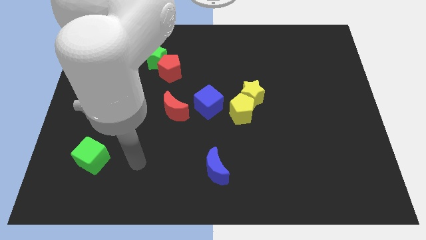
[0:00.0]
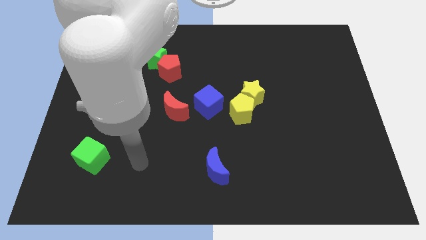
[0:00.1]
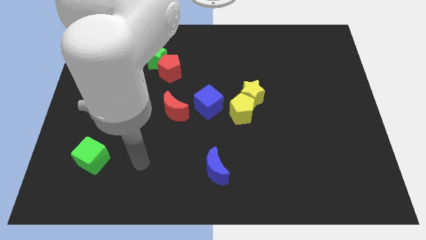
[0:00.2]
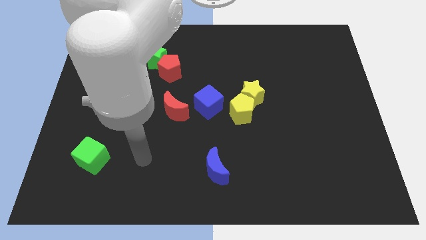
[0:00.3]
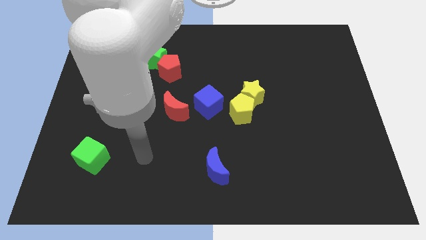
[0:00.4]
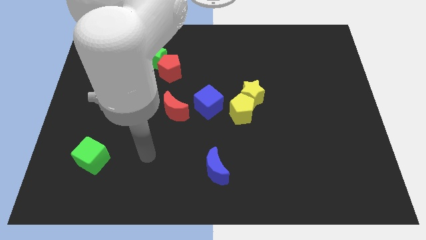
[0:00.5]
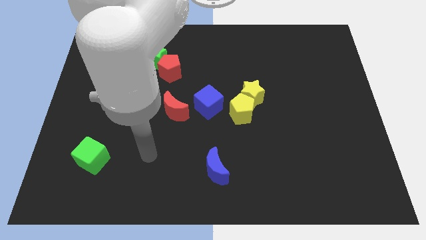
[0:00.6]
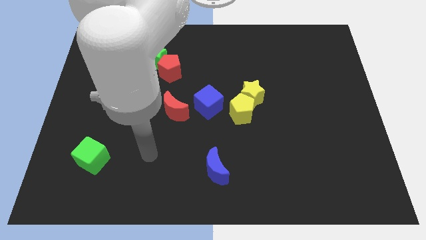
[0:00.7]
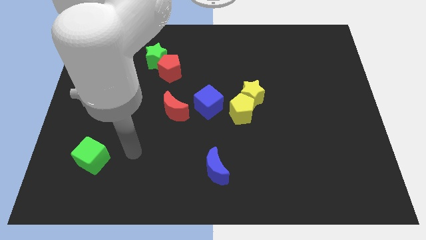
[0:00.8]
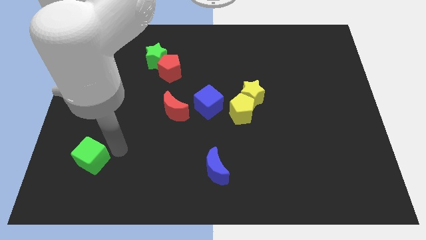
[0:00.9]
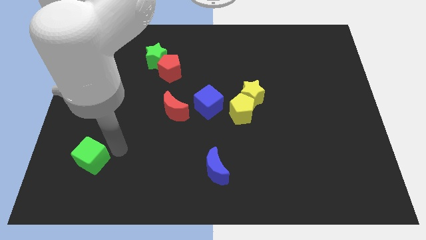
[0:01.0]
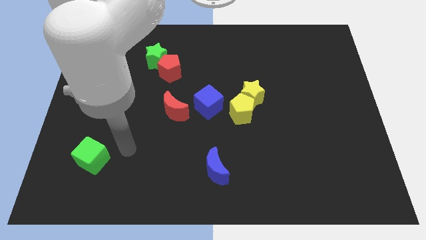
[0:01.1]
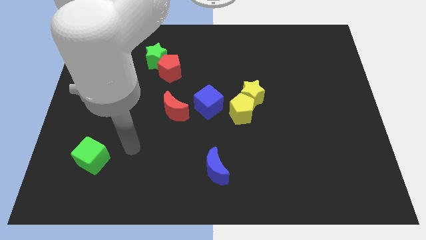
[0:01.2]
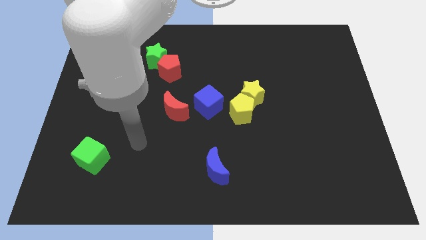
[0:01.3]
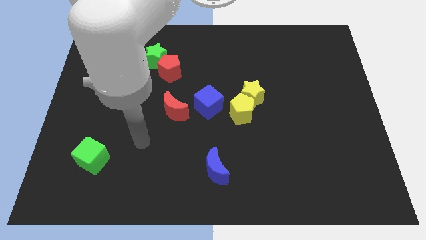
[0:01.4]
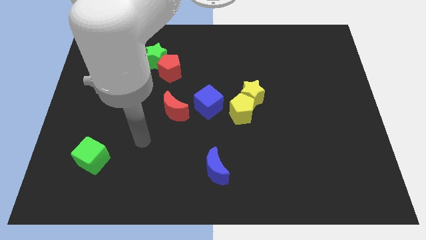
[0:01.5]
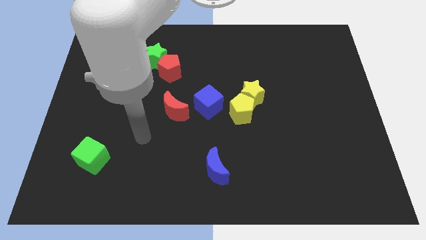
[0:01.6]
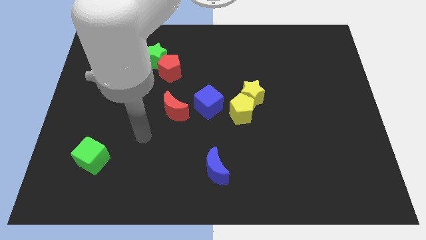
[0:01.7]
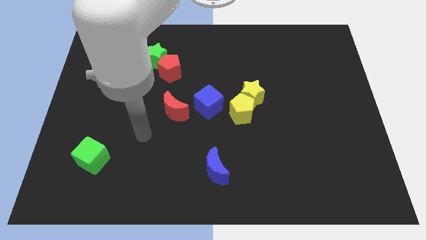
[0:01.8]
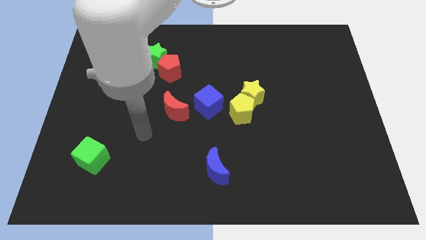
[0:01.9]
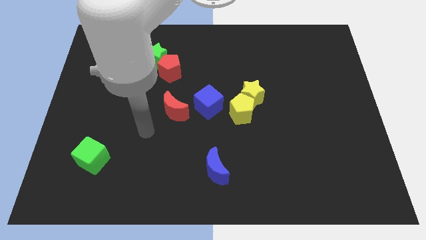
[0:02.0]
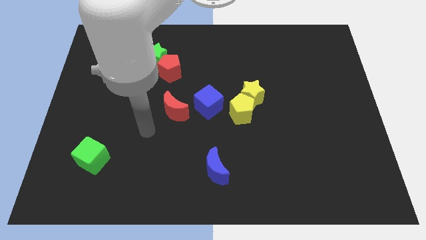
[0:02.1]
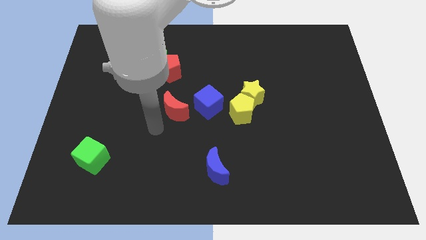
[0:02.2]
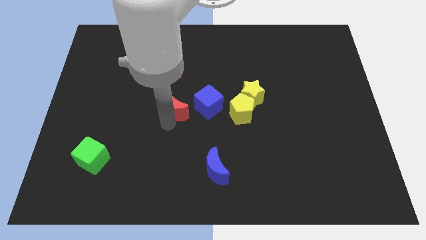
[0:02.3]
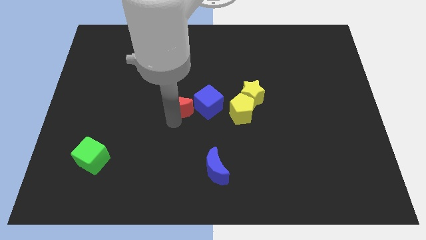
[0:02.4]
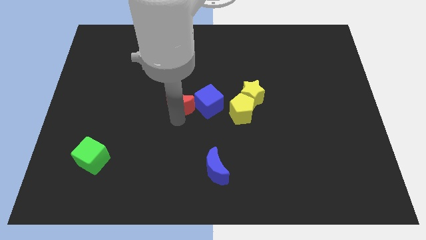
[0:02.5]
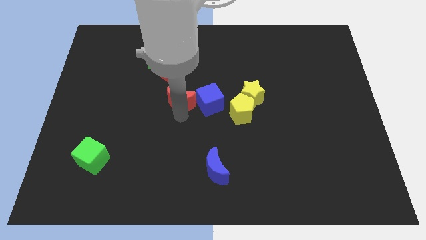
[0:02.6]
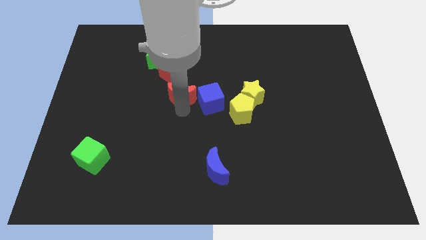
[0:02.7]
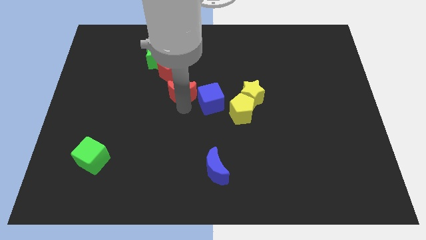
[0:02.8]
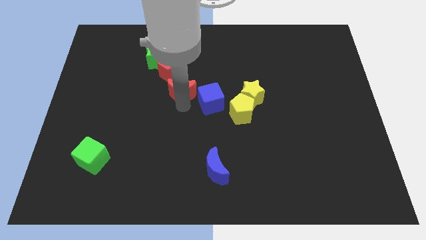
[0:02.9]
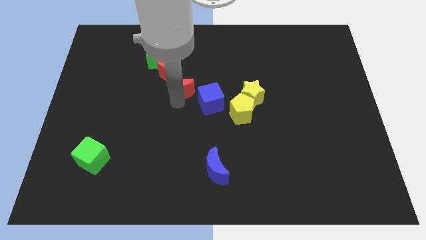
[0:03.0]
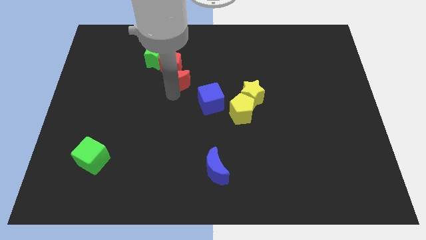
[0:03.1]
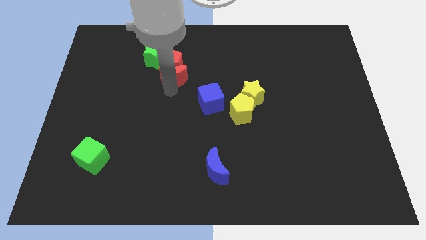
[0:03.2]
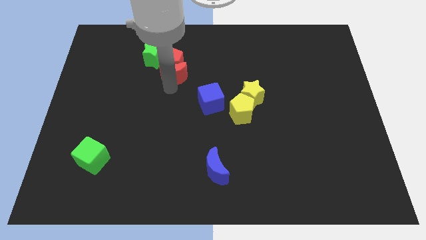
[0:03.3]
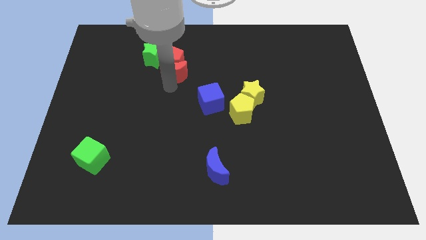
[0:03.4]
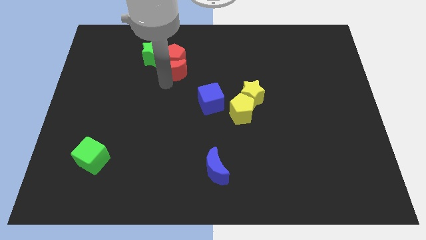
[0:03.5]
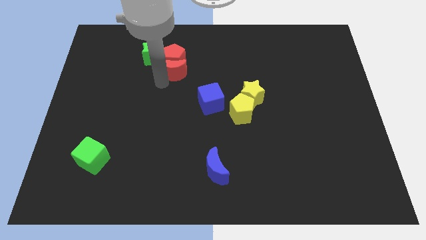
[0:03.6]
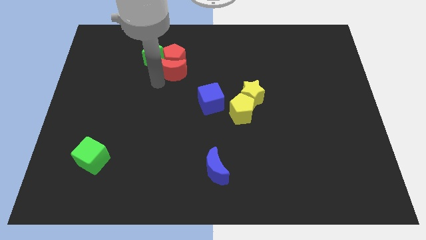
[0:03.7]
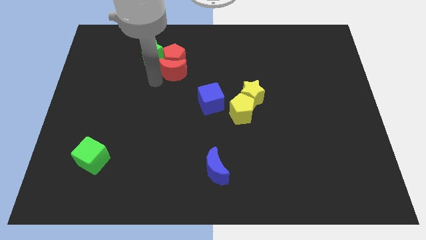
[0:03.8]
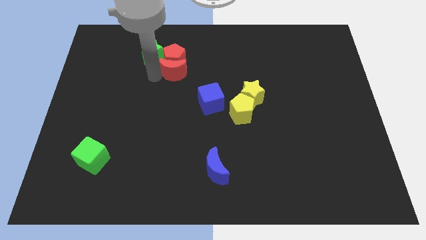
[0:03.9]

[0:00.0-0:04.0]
push the red moon into the red pentagon

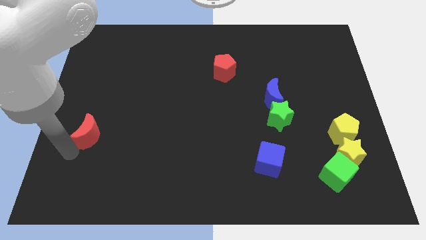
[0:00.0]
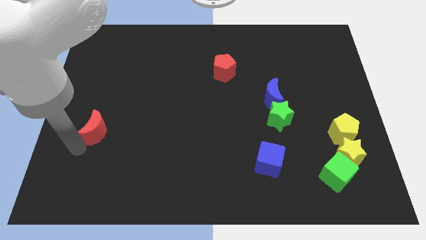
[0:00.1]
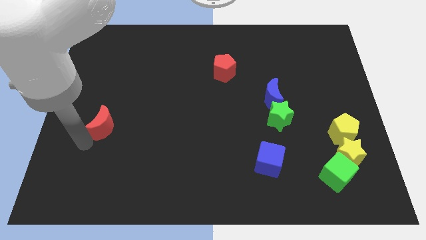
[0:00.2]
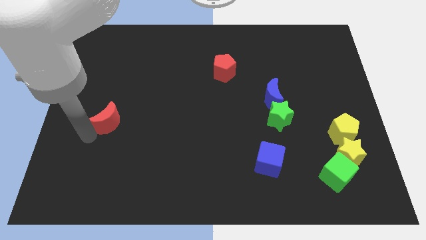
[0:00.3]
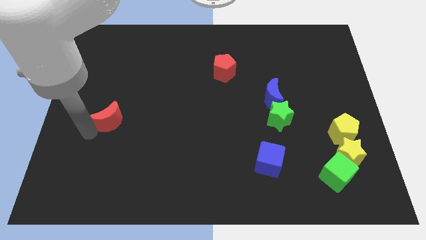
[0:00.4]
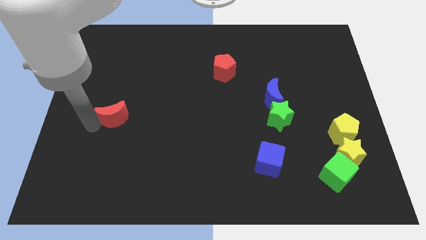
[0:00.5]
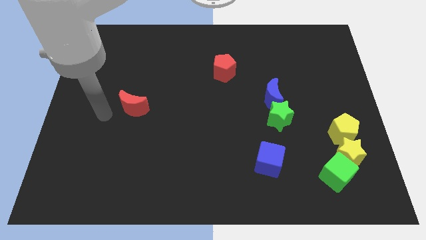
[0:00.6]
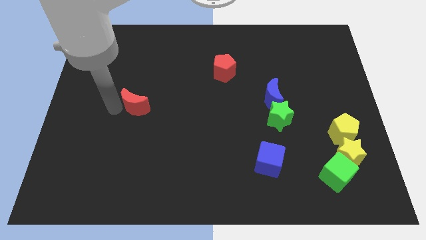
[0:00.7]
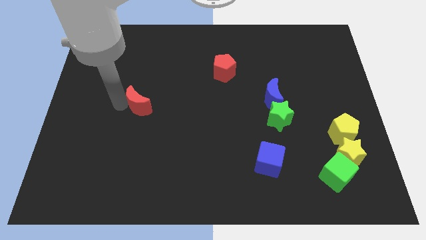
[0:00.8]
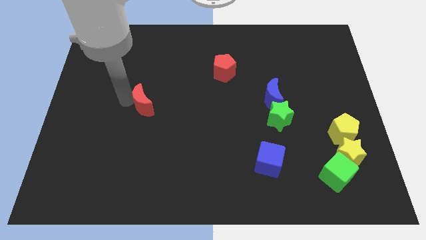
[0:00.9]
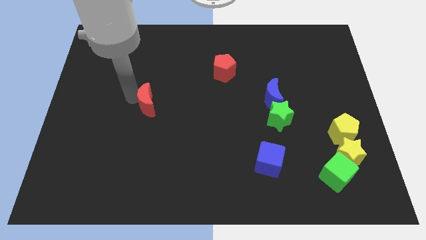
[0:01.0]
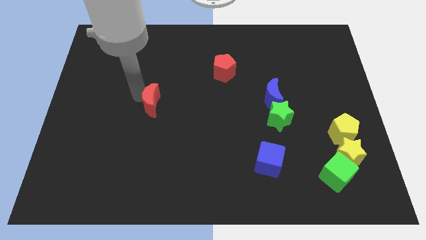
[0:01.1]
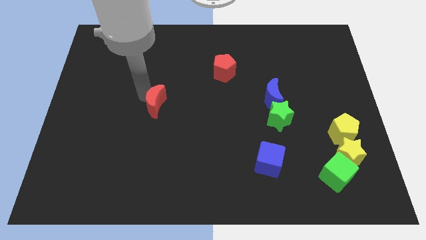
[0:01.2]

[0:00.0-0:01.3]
push the red crescent towards the blue crescent

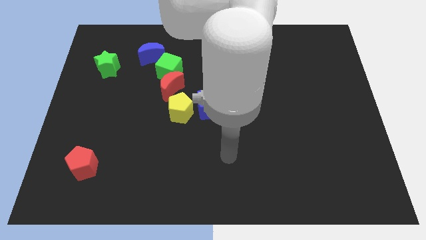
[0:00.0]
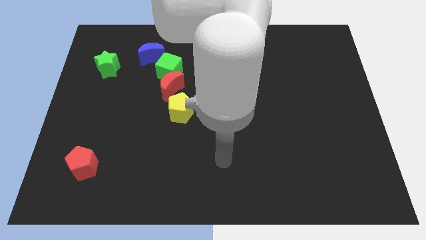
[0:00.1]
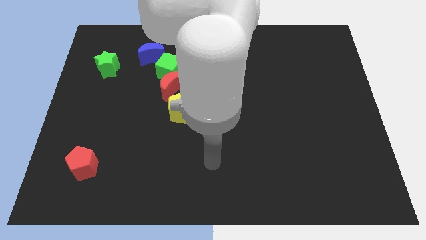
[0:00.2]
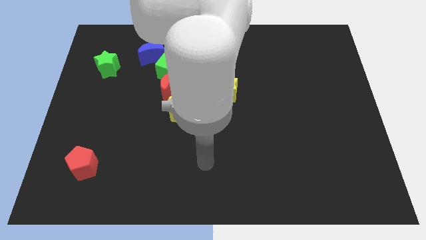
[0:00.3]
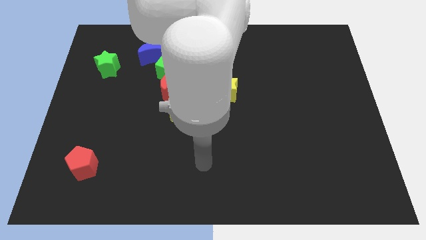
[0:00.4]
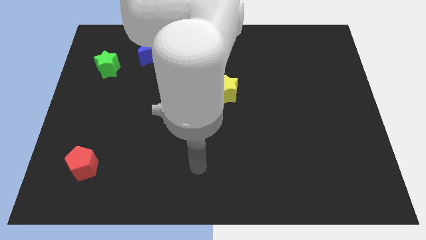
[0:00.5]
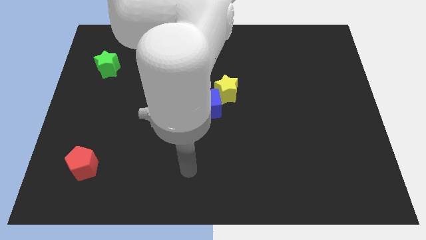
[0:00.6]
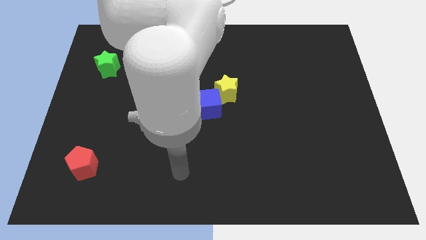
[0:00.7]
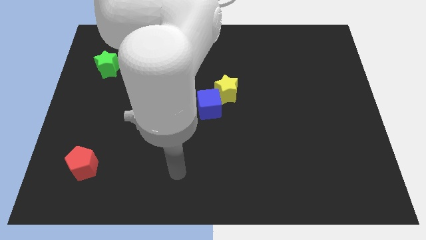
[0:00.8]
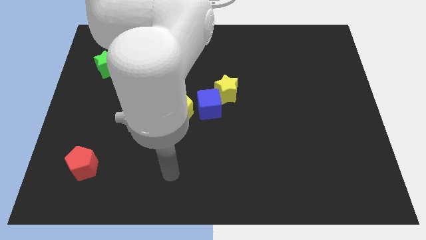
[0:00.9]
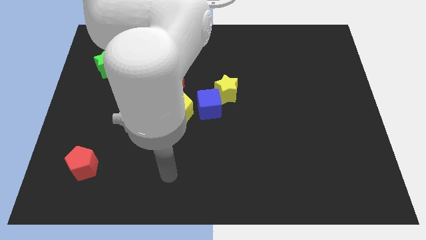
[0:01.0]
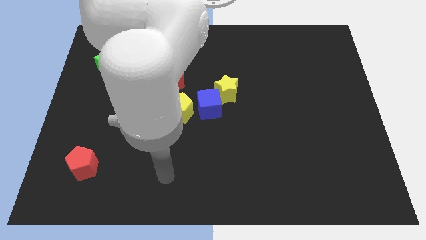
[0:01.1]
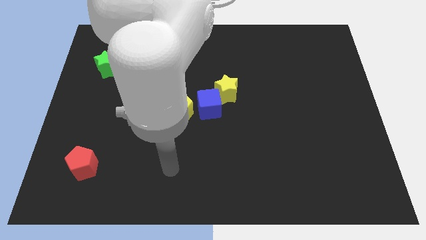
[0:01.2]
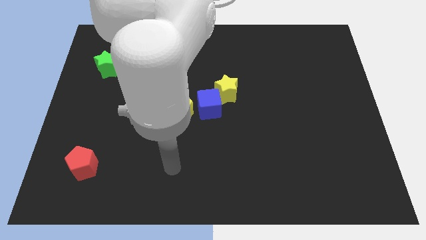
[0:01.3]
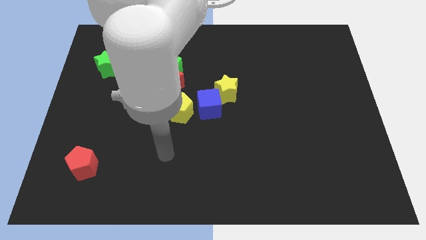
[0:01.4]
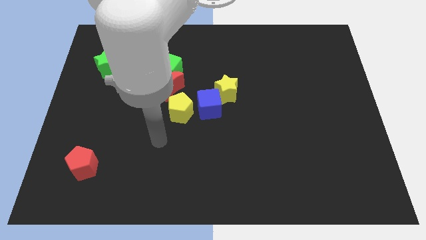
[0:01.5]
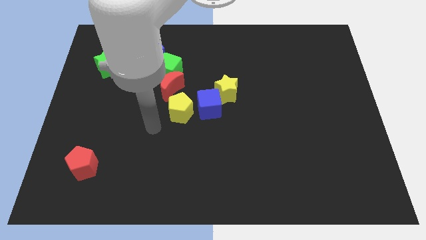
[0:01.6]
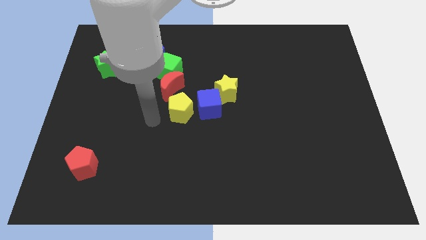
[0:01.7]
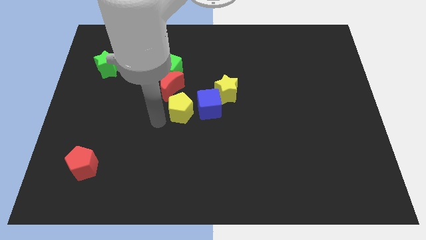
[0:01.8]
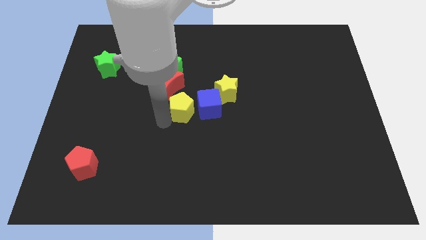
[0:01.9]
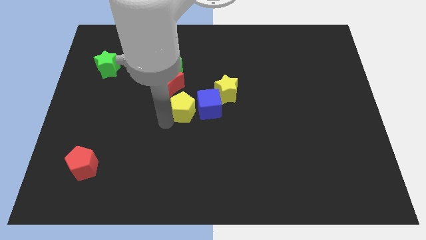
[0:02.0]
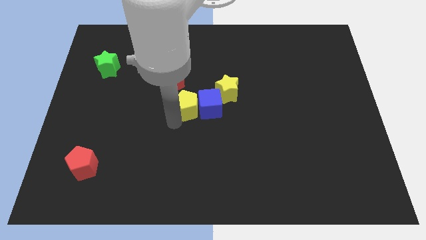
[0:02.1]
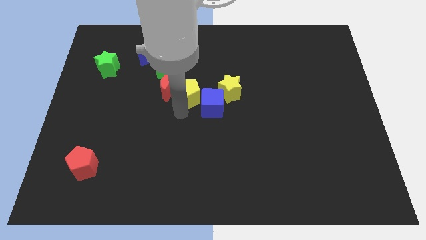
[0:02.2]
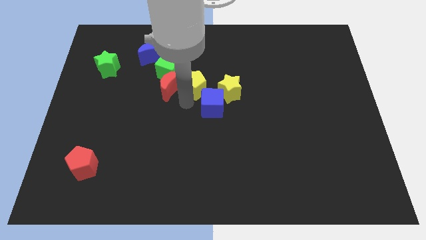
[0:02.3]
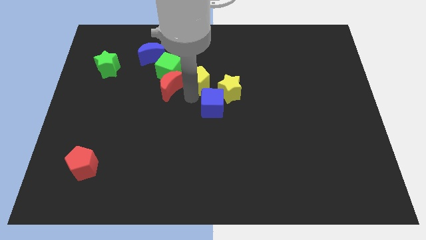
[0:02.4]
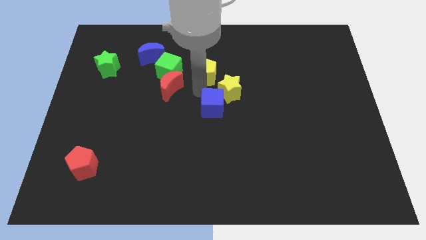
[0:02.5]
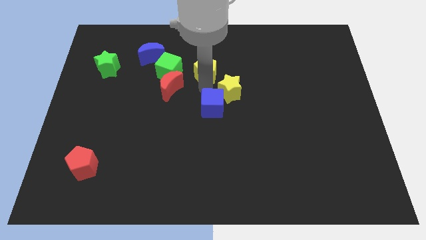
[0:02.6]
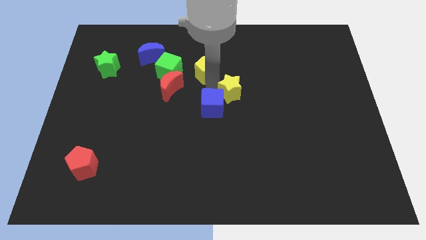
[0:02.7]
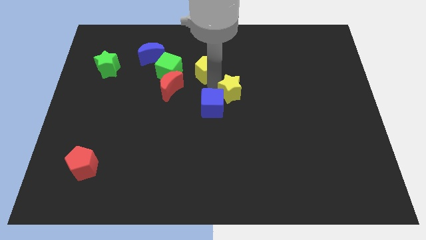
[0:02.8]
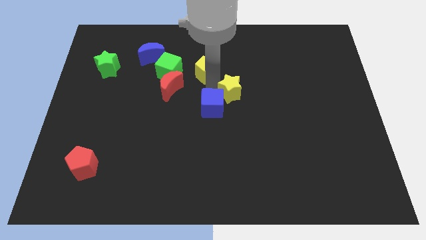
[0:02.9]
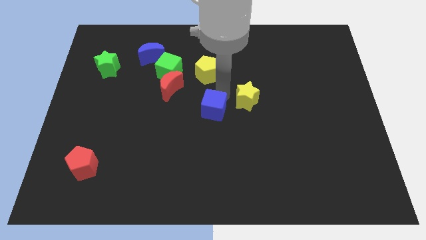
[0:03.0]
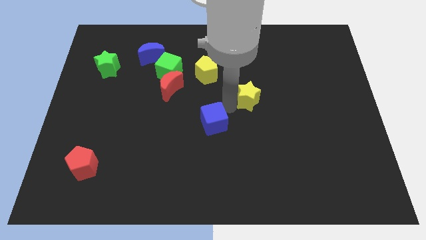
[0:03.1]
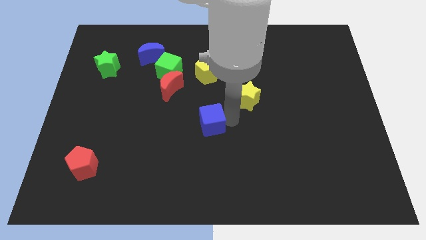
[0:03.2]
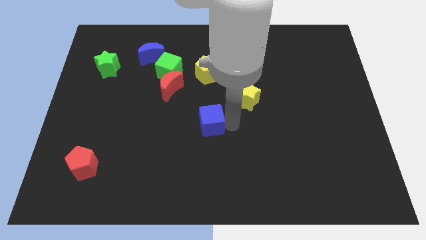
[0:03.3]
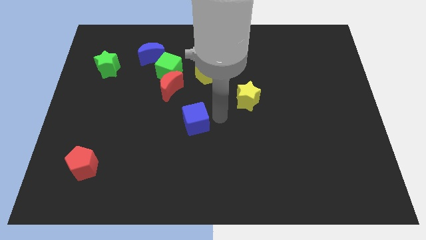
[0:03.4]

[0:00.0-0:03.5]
place the yellow pentagon vertically above the blue cube
